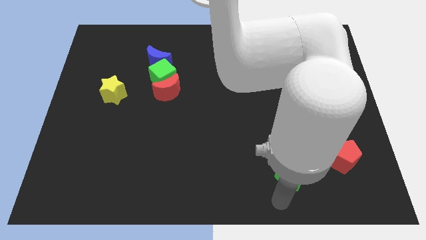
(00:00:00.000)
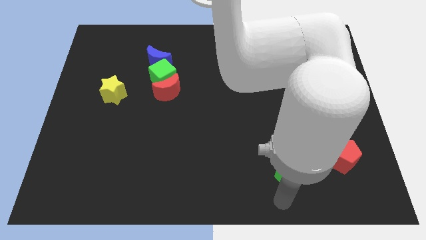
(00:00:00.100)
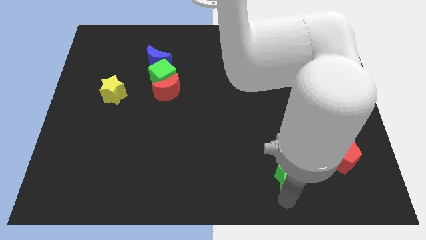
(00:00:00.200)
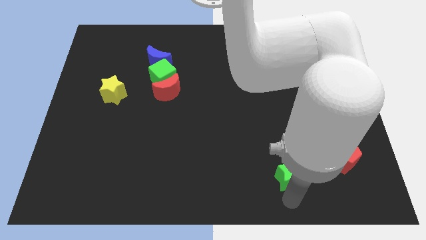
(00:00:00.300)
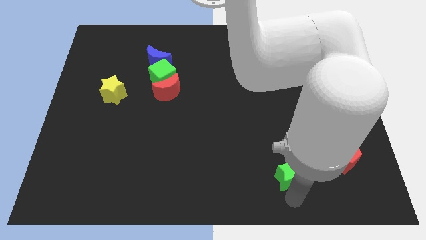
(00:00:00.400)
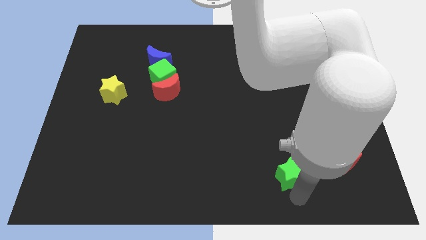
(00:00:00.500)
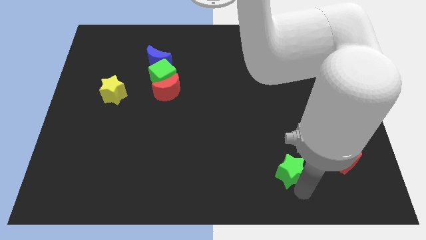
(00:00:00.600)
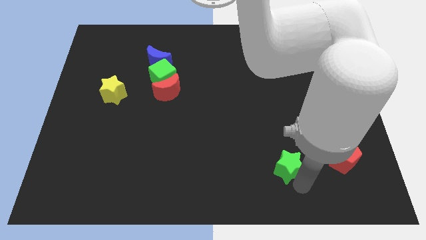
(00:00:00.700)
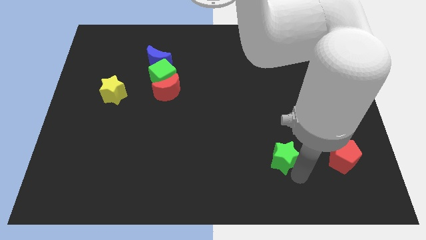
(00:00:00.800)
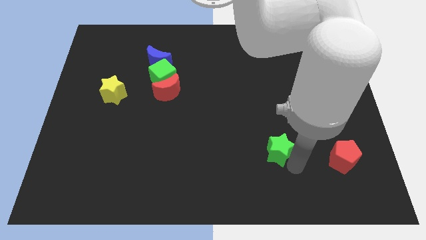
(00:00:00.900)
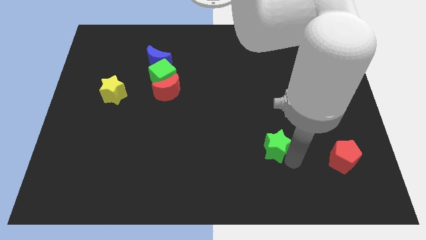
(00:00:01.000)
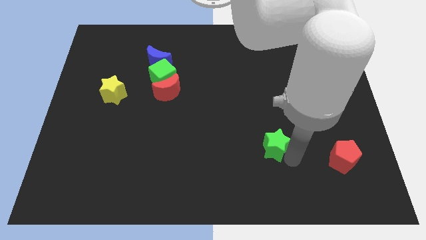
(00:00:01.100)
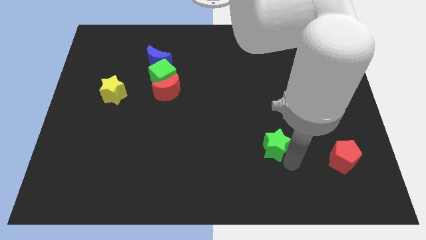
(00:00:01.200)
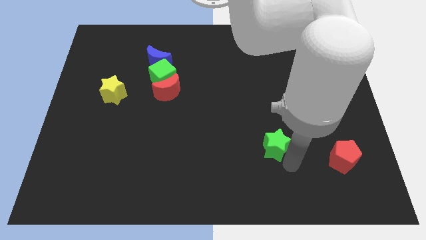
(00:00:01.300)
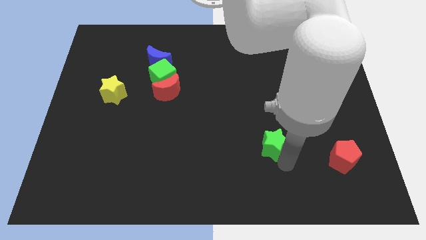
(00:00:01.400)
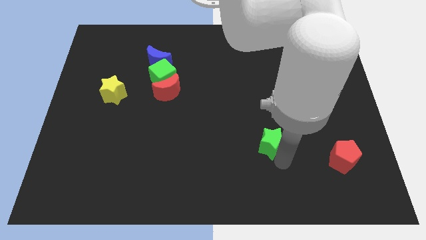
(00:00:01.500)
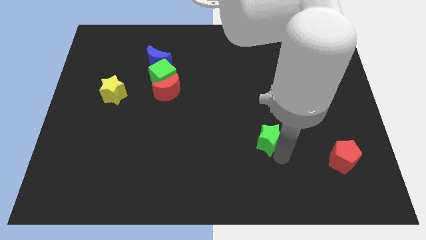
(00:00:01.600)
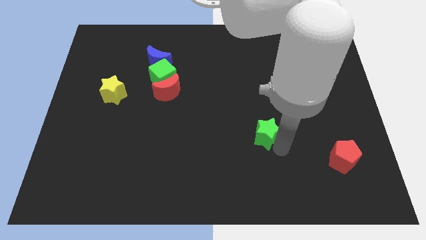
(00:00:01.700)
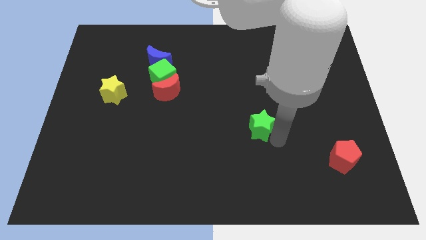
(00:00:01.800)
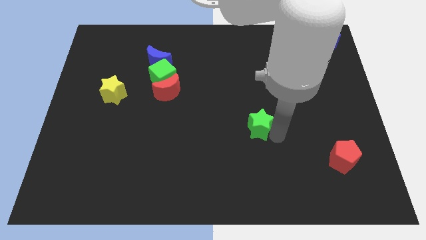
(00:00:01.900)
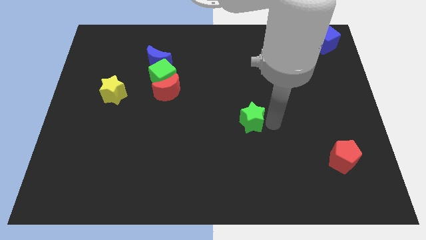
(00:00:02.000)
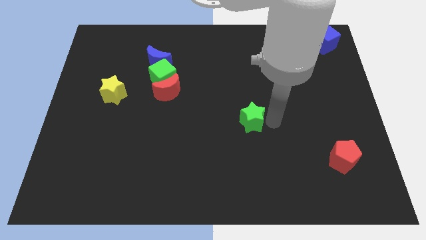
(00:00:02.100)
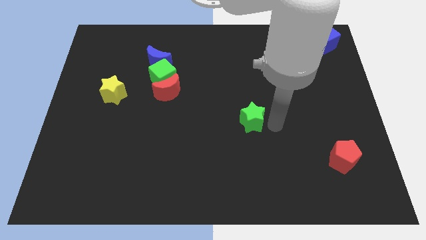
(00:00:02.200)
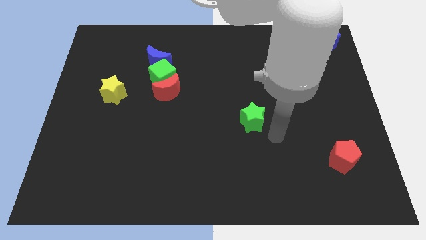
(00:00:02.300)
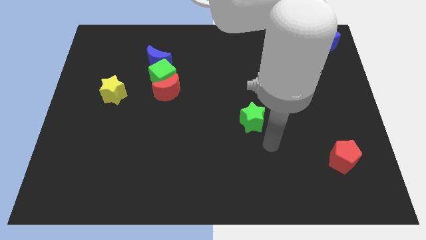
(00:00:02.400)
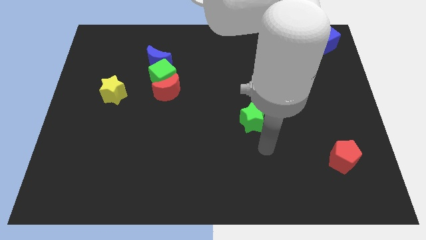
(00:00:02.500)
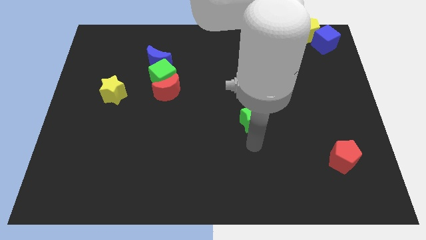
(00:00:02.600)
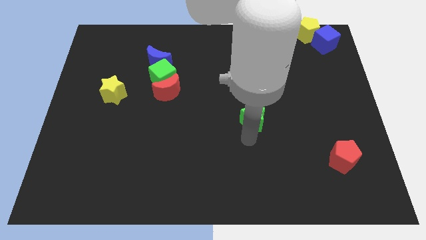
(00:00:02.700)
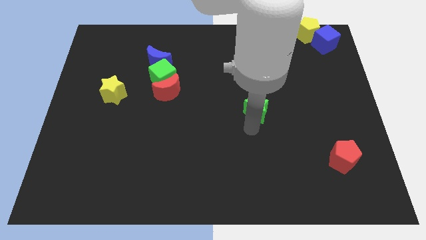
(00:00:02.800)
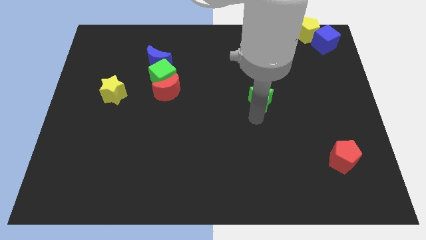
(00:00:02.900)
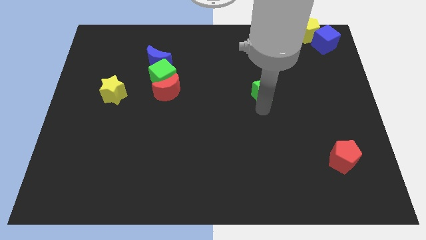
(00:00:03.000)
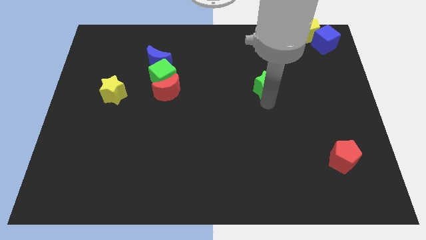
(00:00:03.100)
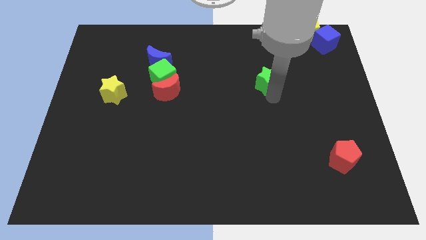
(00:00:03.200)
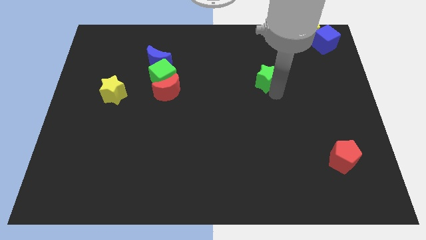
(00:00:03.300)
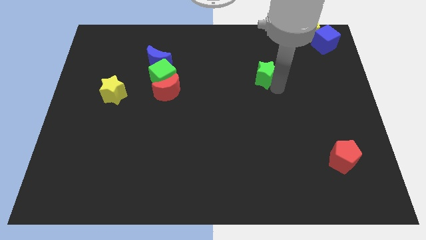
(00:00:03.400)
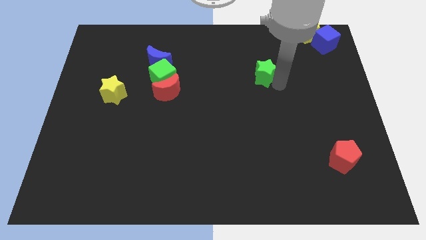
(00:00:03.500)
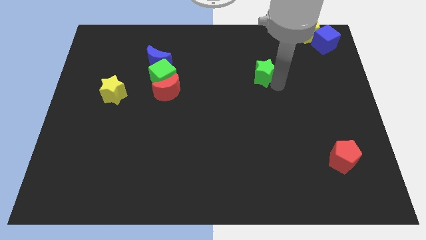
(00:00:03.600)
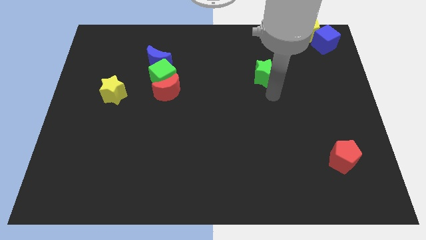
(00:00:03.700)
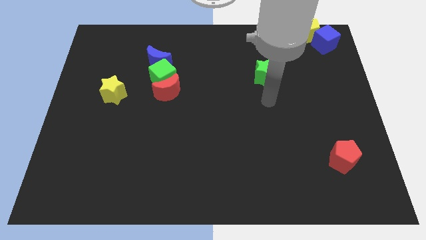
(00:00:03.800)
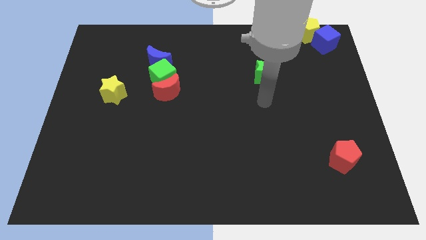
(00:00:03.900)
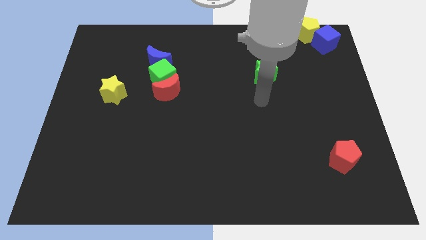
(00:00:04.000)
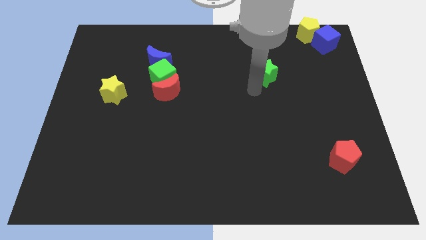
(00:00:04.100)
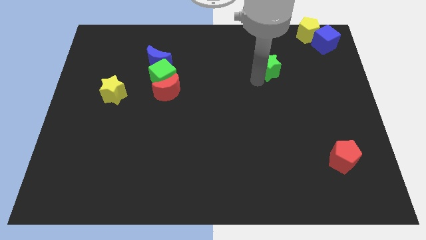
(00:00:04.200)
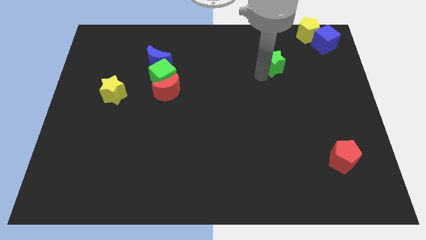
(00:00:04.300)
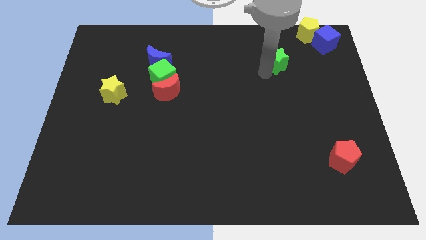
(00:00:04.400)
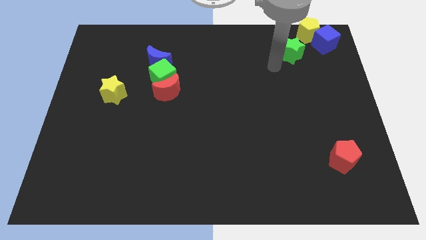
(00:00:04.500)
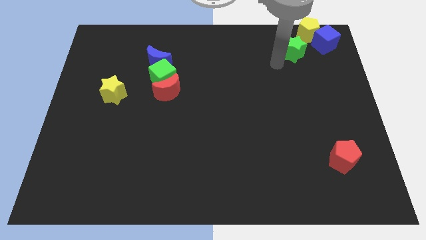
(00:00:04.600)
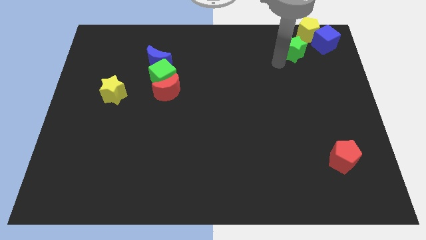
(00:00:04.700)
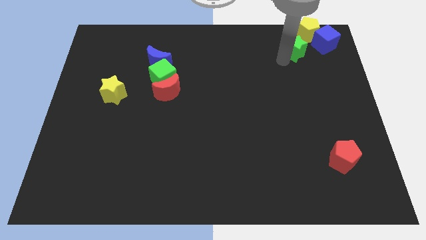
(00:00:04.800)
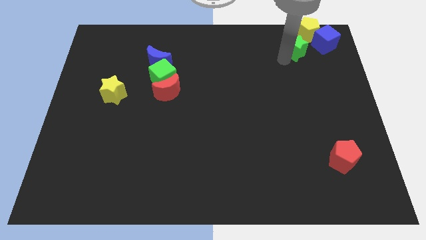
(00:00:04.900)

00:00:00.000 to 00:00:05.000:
move the green star towards blue cube and yellow pentagon

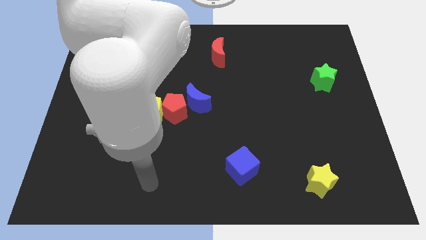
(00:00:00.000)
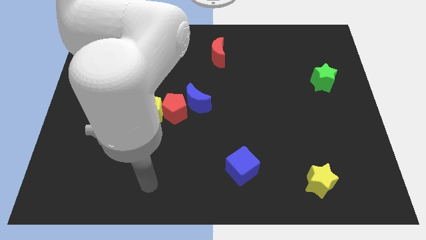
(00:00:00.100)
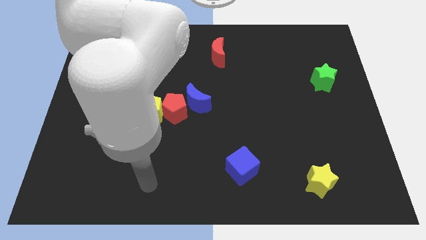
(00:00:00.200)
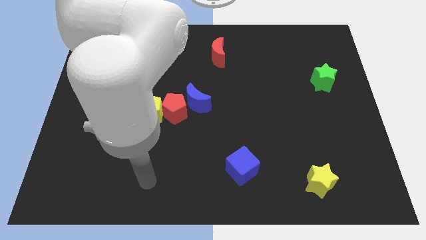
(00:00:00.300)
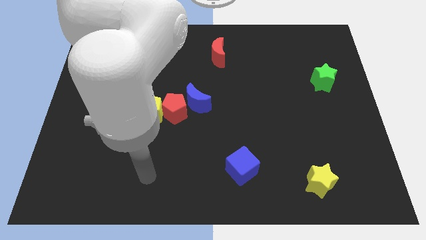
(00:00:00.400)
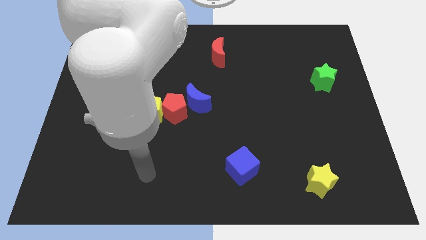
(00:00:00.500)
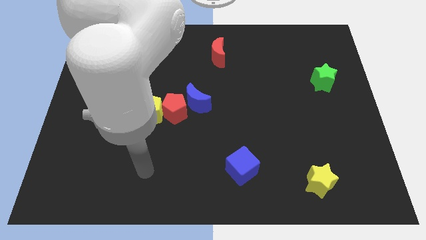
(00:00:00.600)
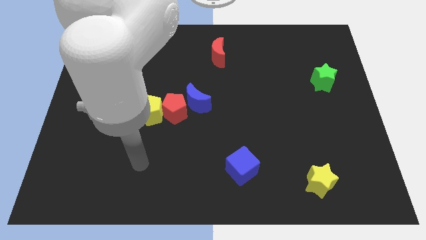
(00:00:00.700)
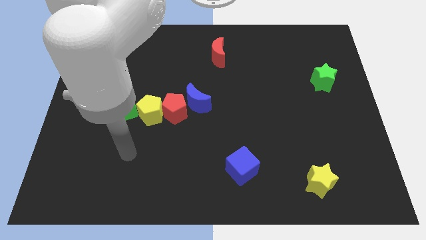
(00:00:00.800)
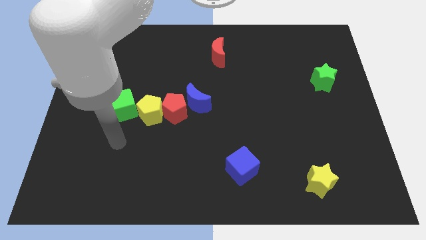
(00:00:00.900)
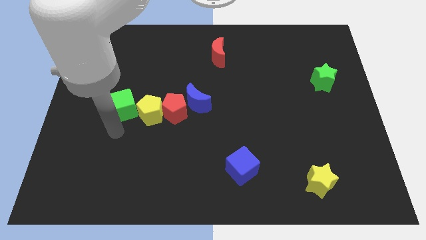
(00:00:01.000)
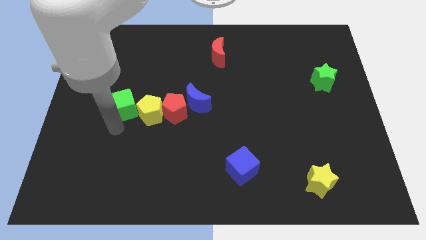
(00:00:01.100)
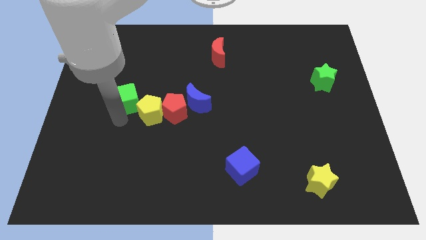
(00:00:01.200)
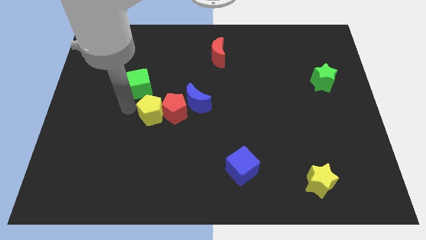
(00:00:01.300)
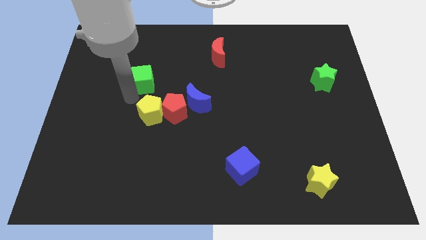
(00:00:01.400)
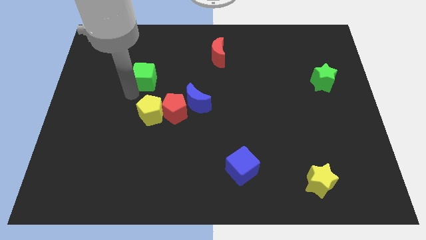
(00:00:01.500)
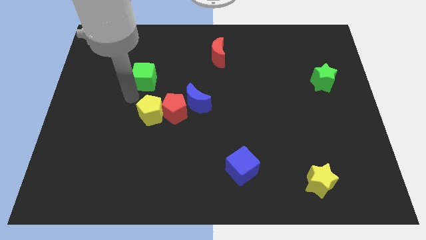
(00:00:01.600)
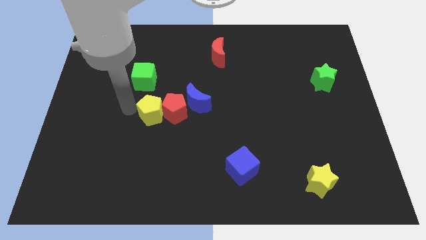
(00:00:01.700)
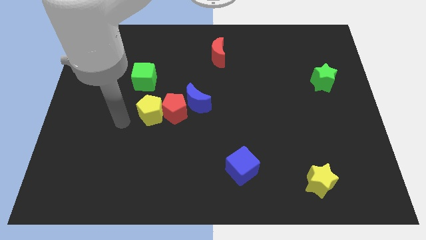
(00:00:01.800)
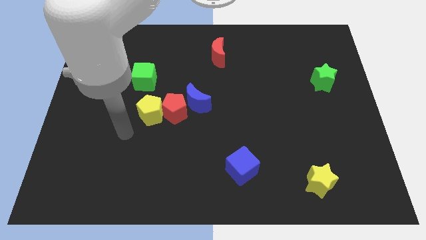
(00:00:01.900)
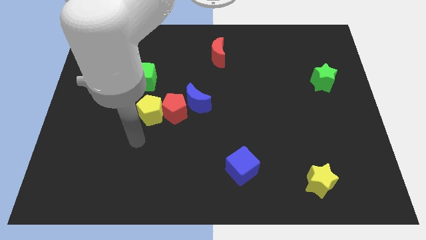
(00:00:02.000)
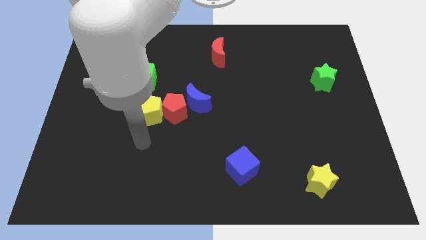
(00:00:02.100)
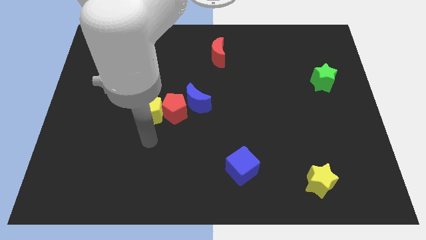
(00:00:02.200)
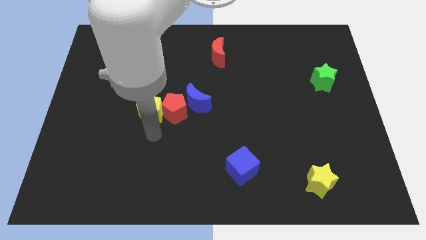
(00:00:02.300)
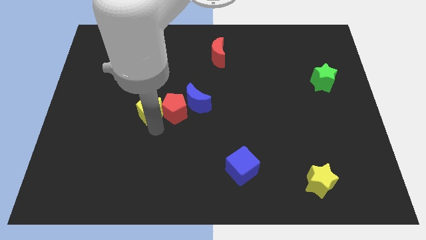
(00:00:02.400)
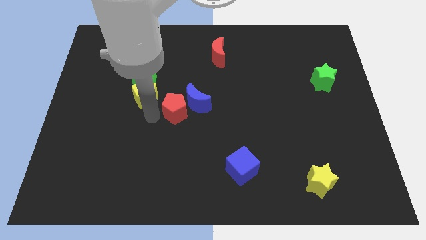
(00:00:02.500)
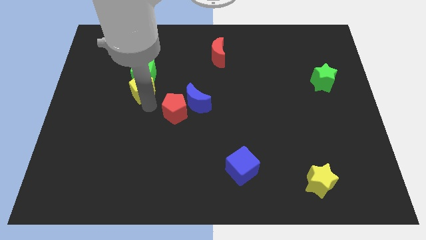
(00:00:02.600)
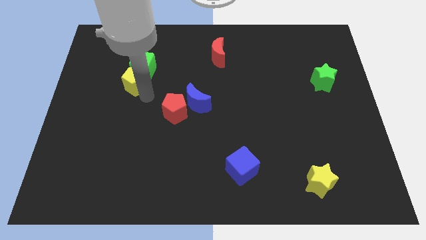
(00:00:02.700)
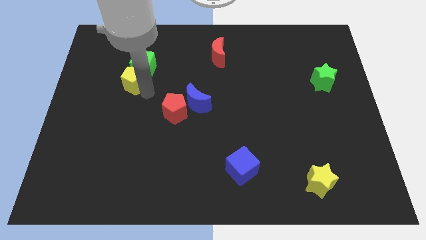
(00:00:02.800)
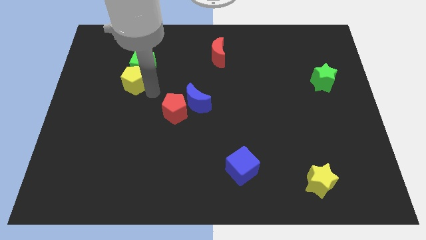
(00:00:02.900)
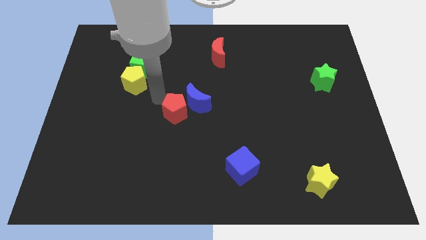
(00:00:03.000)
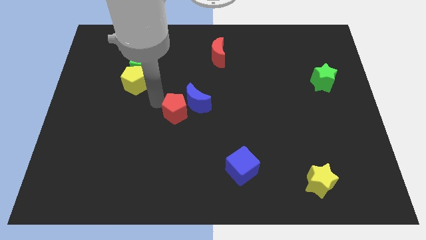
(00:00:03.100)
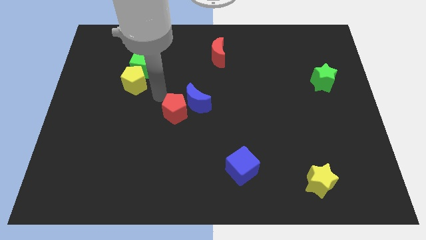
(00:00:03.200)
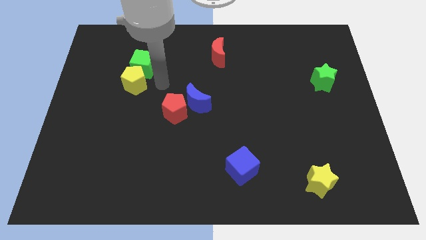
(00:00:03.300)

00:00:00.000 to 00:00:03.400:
move the green cube up slightly

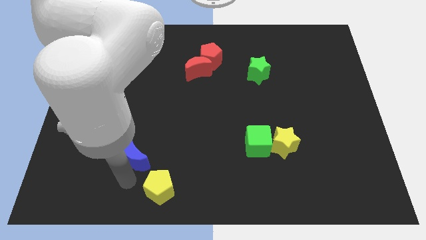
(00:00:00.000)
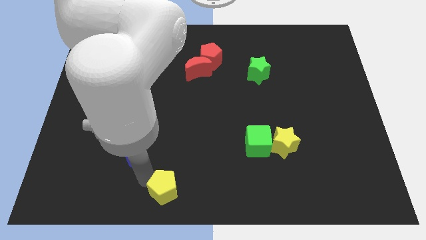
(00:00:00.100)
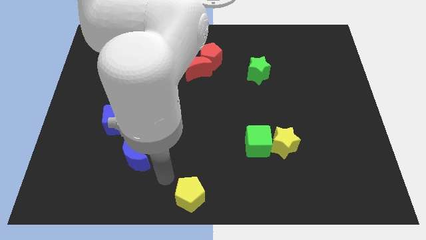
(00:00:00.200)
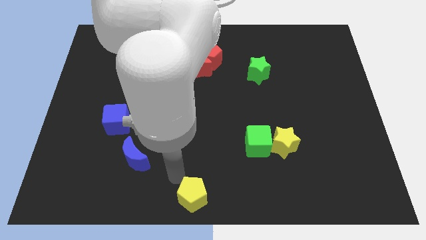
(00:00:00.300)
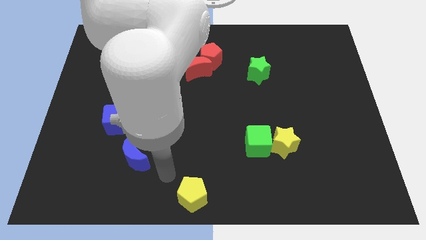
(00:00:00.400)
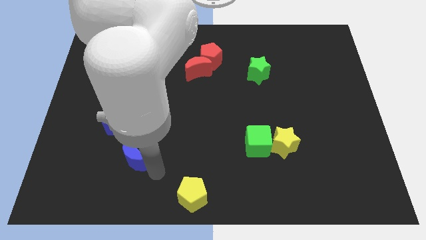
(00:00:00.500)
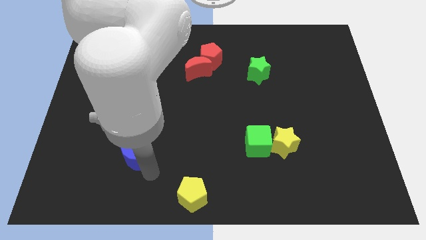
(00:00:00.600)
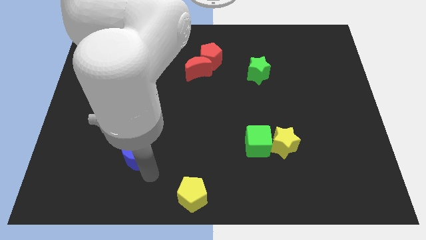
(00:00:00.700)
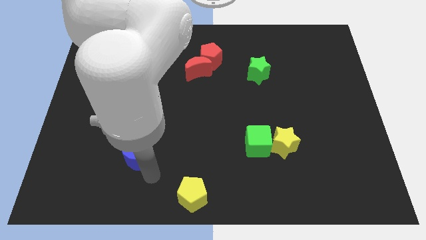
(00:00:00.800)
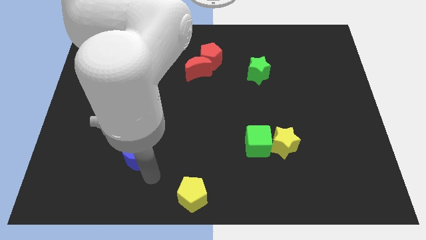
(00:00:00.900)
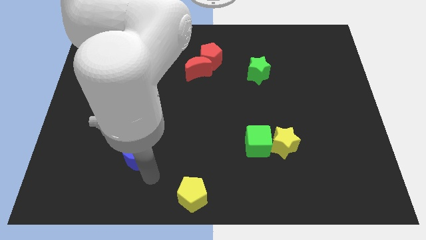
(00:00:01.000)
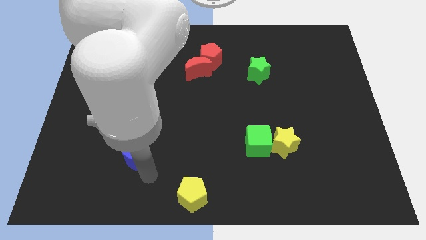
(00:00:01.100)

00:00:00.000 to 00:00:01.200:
put the yellow pentagon vertically below the red moon
